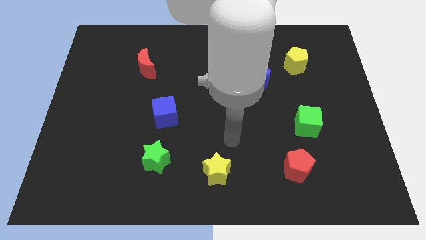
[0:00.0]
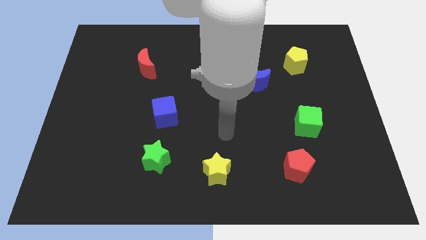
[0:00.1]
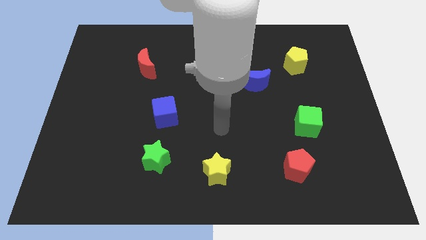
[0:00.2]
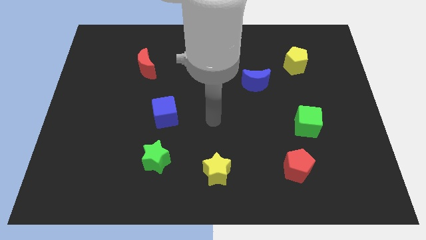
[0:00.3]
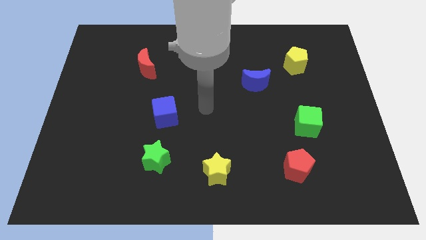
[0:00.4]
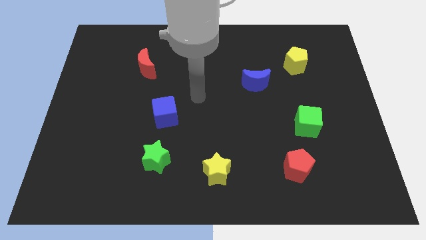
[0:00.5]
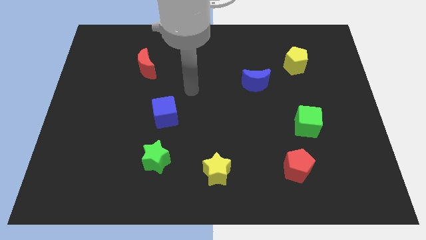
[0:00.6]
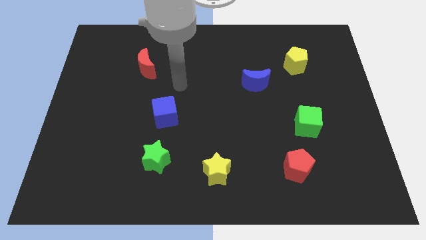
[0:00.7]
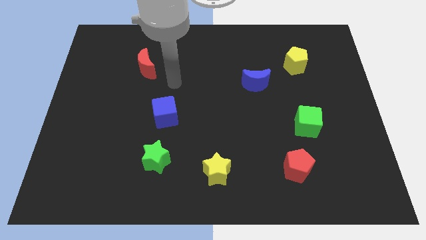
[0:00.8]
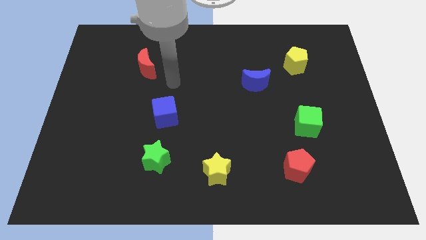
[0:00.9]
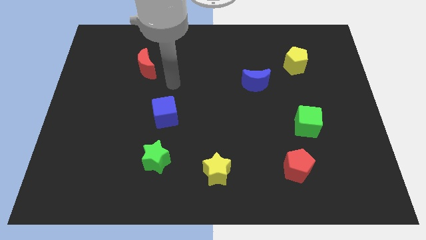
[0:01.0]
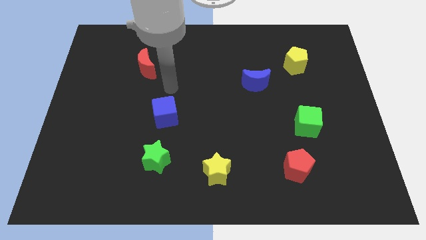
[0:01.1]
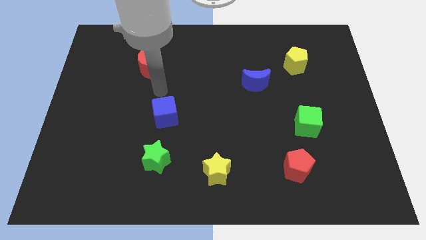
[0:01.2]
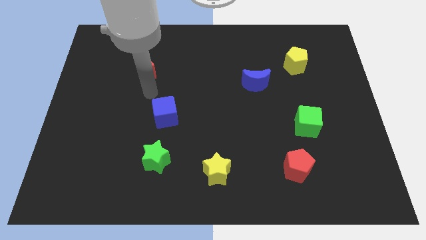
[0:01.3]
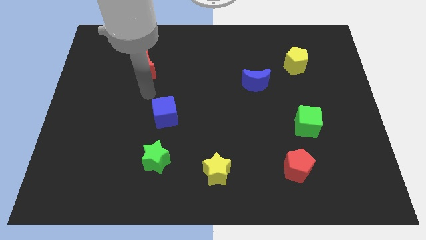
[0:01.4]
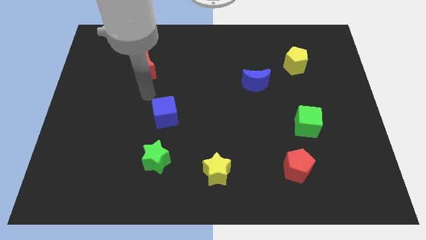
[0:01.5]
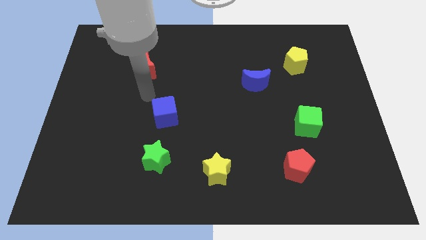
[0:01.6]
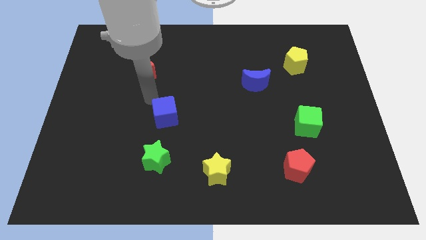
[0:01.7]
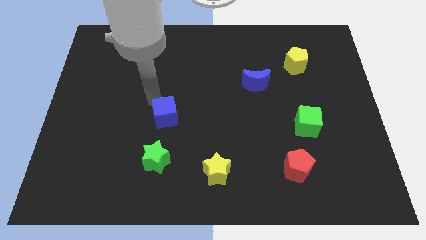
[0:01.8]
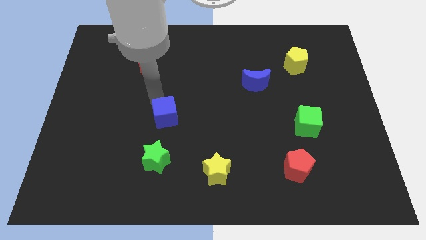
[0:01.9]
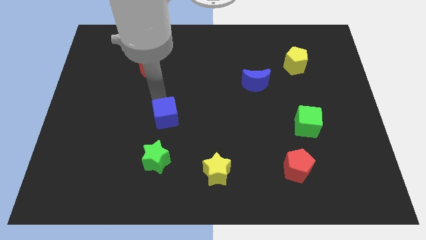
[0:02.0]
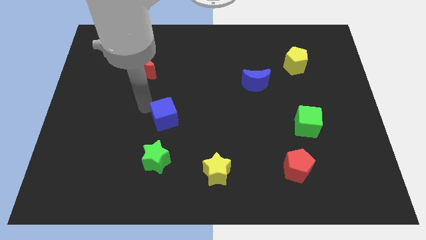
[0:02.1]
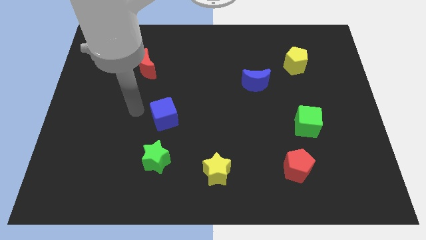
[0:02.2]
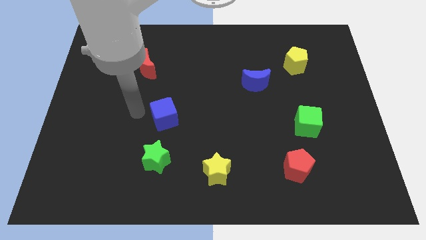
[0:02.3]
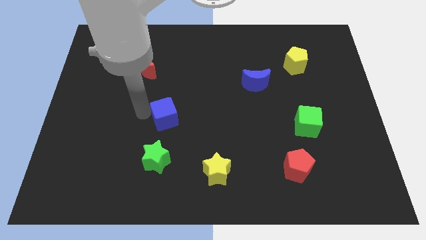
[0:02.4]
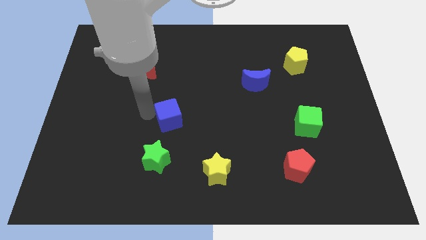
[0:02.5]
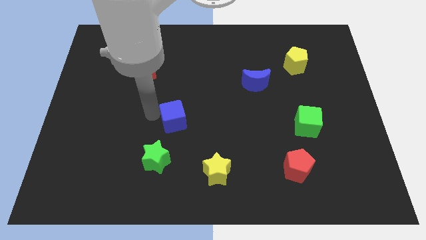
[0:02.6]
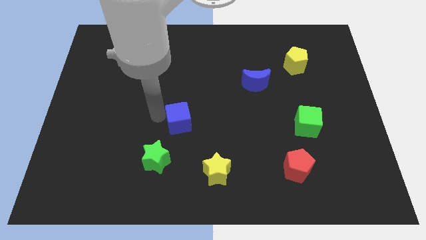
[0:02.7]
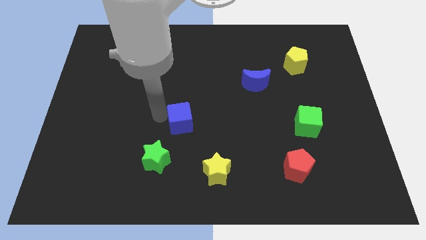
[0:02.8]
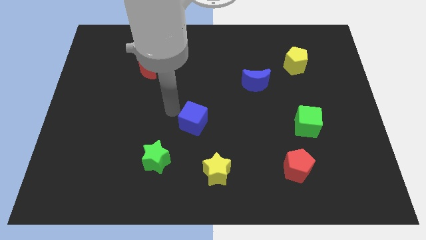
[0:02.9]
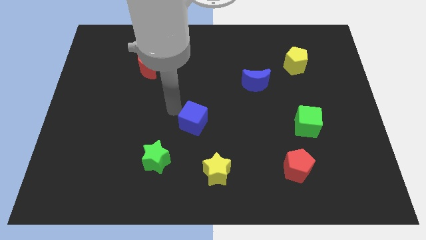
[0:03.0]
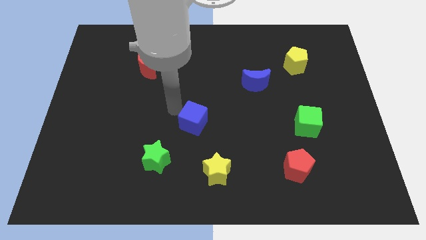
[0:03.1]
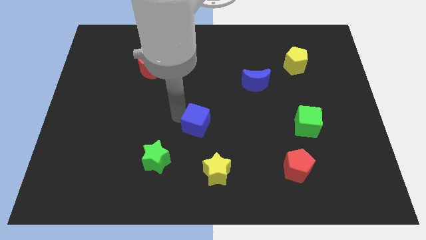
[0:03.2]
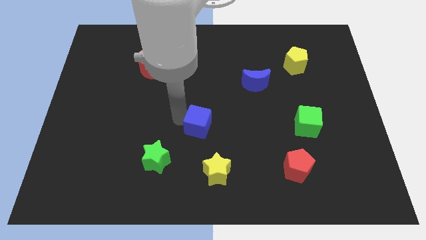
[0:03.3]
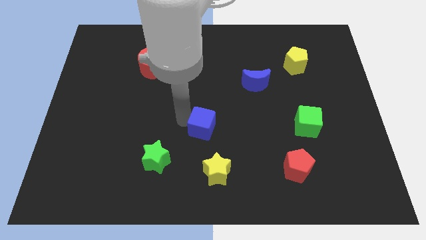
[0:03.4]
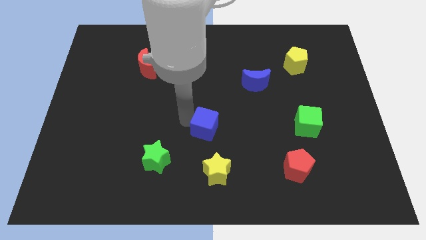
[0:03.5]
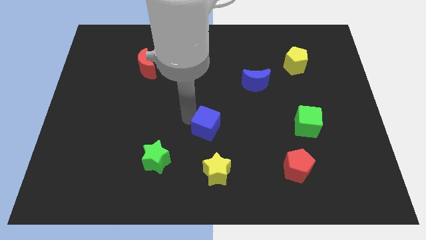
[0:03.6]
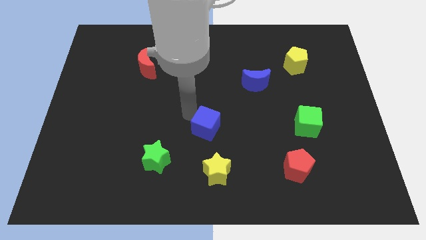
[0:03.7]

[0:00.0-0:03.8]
place the blue cube to the top right of the green star

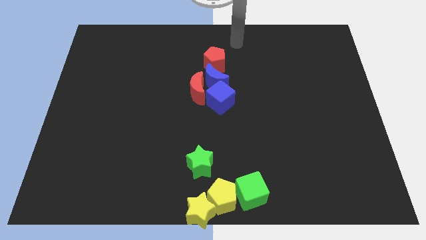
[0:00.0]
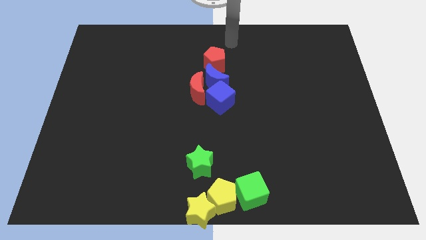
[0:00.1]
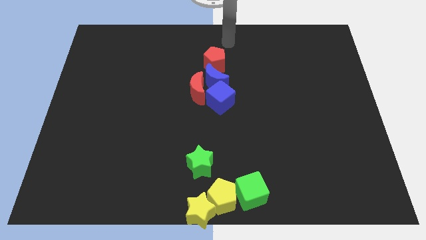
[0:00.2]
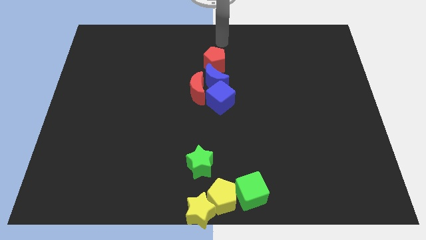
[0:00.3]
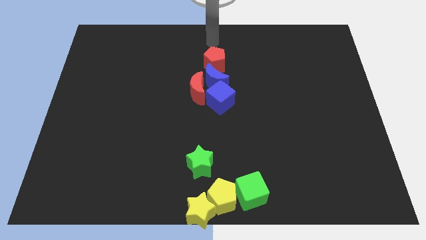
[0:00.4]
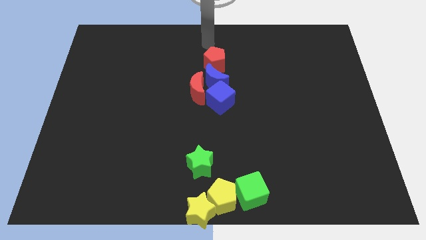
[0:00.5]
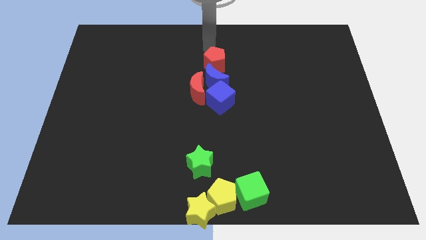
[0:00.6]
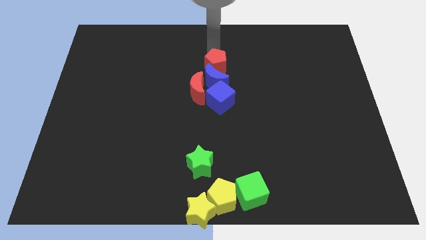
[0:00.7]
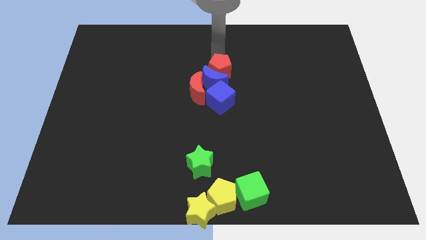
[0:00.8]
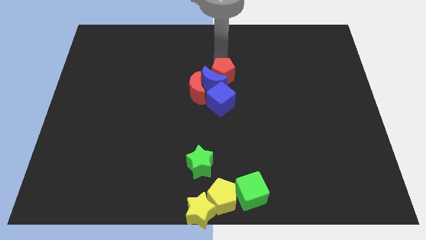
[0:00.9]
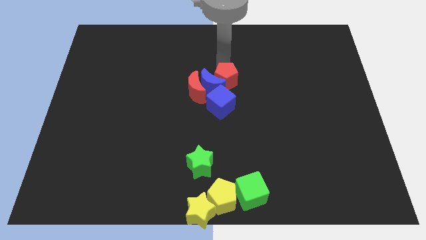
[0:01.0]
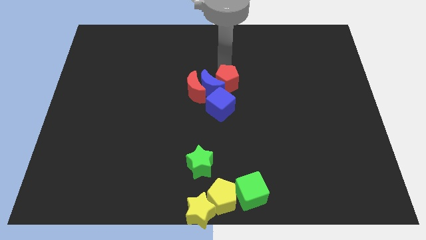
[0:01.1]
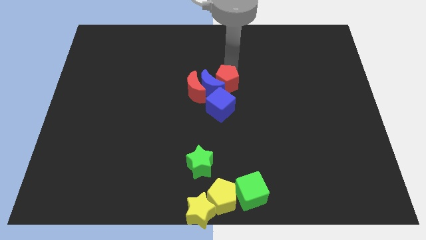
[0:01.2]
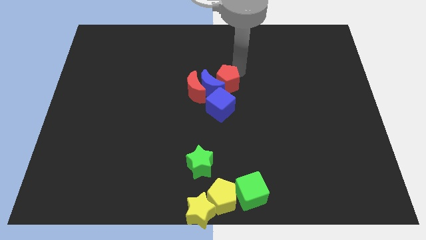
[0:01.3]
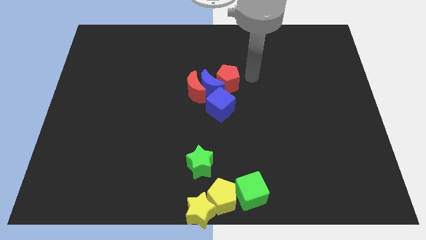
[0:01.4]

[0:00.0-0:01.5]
push the red pentagon into the blue crescent

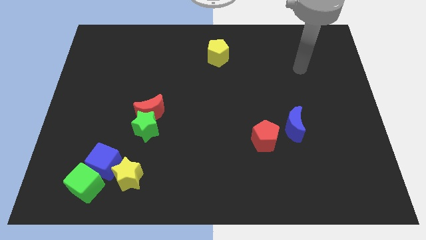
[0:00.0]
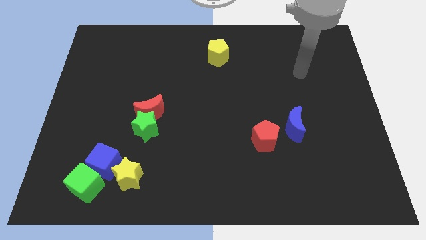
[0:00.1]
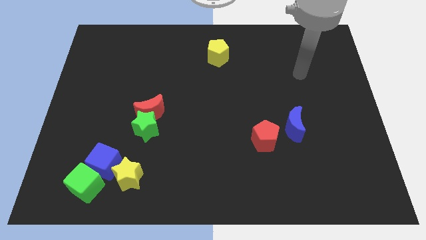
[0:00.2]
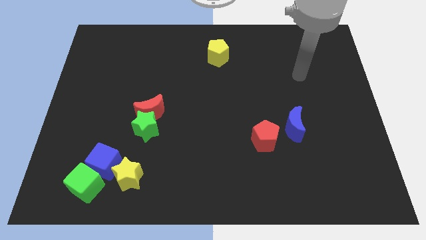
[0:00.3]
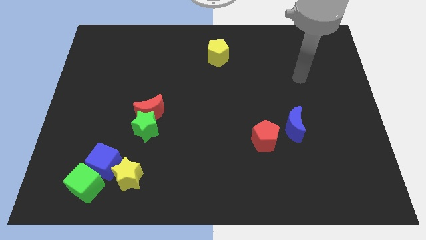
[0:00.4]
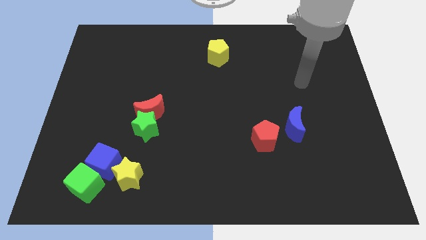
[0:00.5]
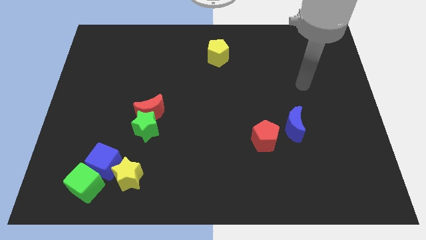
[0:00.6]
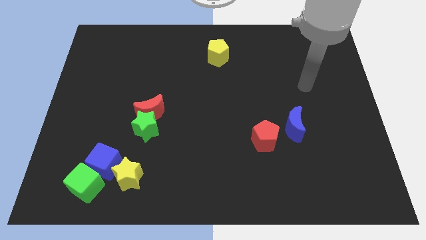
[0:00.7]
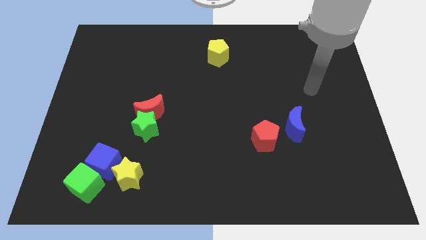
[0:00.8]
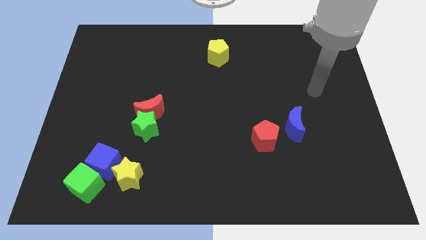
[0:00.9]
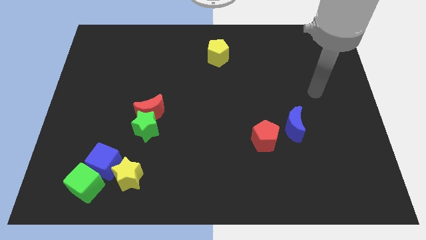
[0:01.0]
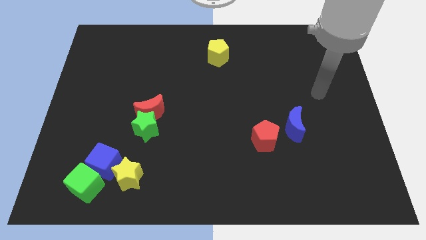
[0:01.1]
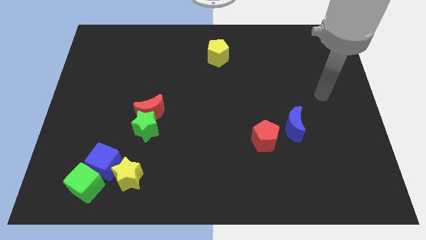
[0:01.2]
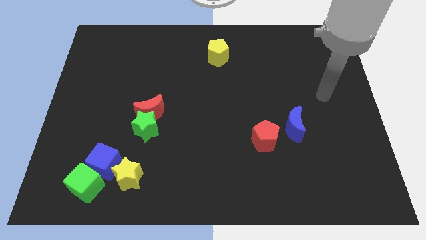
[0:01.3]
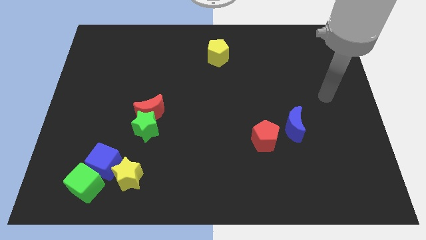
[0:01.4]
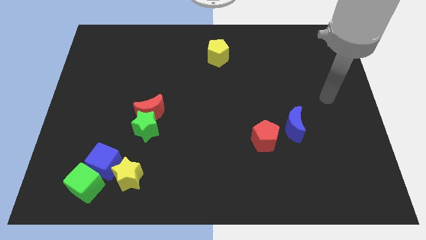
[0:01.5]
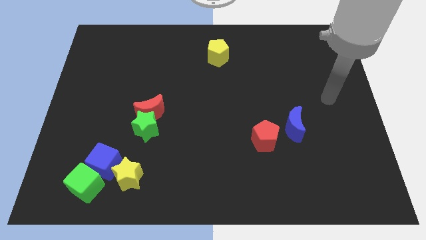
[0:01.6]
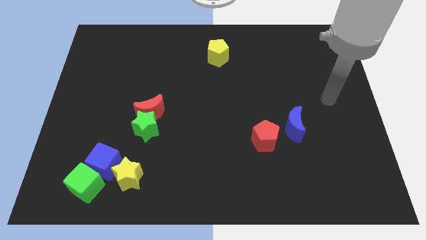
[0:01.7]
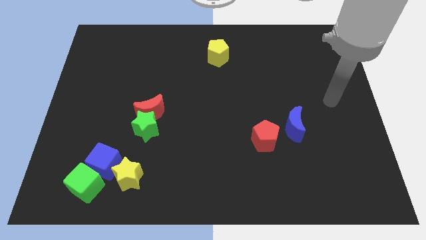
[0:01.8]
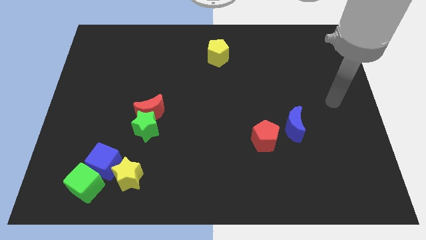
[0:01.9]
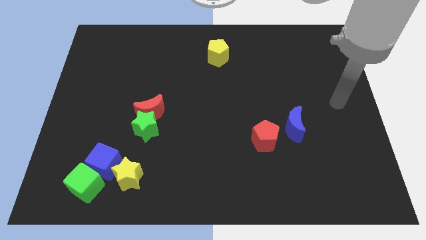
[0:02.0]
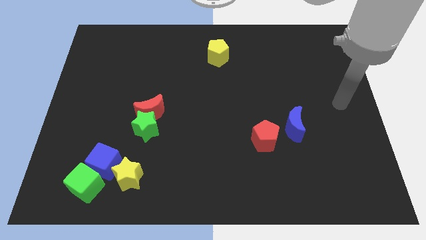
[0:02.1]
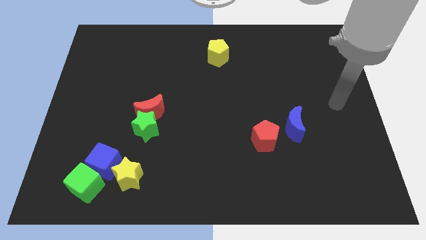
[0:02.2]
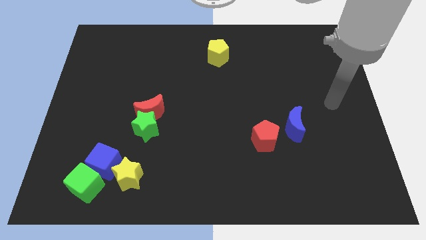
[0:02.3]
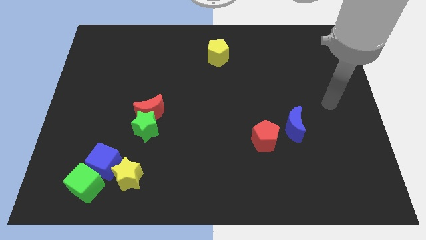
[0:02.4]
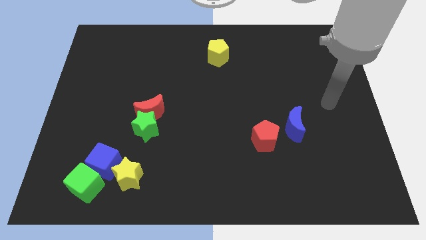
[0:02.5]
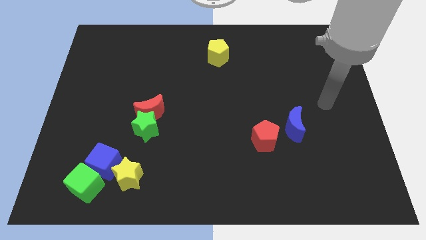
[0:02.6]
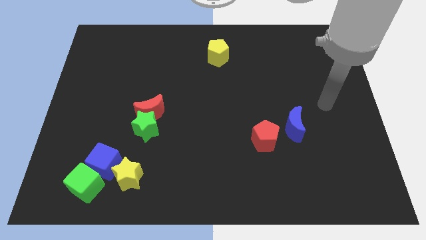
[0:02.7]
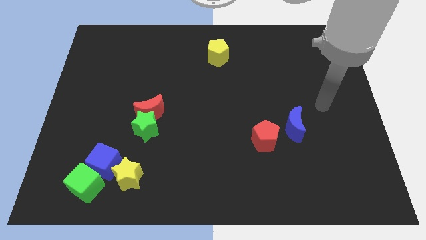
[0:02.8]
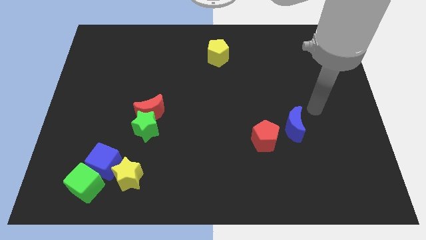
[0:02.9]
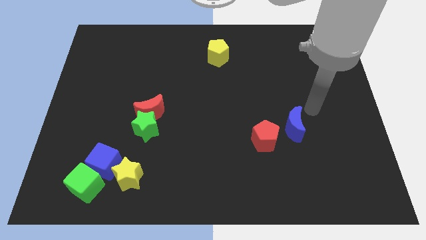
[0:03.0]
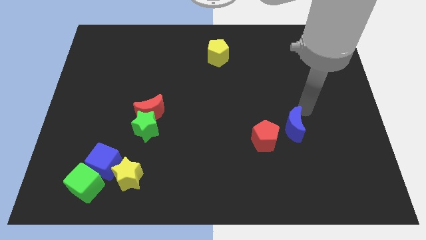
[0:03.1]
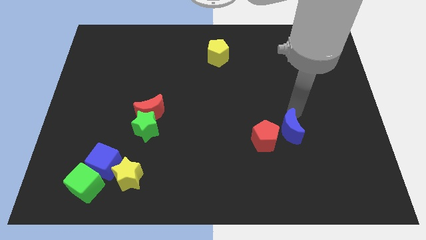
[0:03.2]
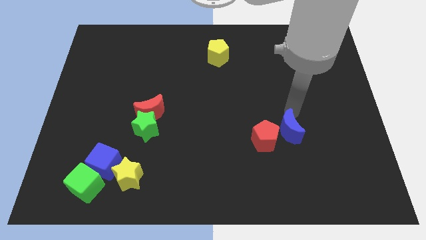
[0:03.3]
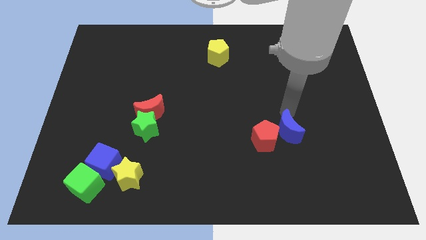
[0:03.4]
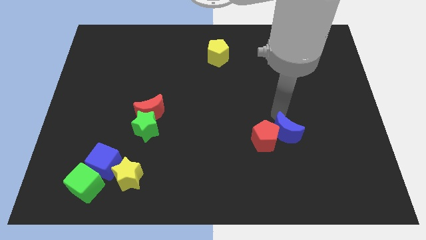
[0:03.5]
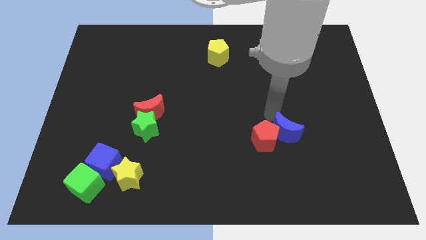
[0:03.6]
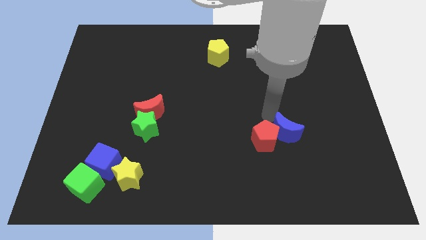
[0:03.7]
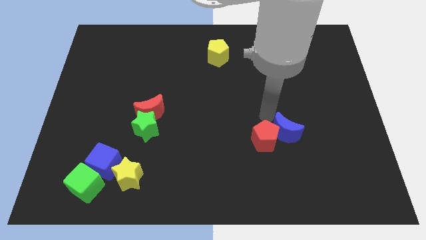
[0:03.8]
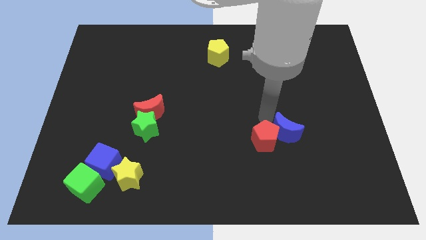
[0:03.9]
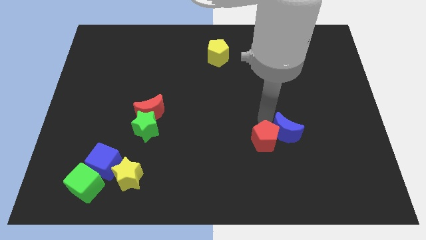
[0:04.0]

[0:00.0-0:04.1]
push the blue crescent into the red pentagon
